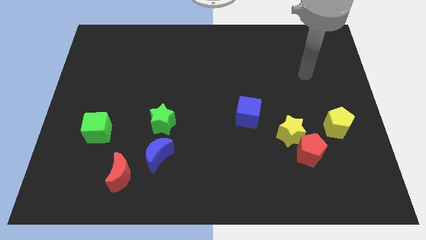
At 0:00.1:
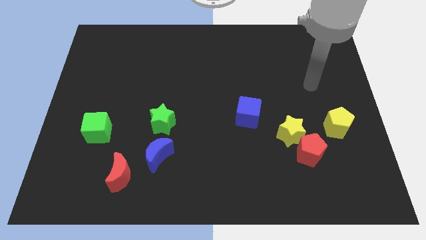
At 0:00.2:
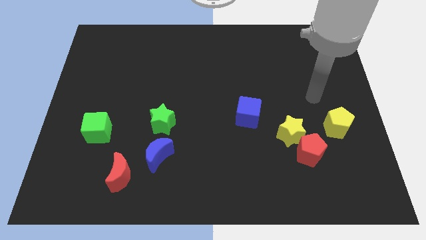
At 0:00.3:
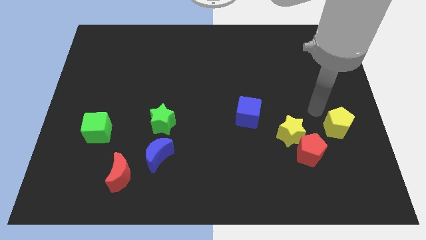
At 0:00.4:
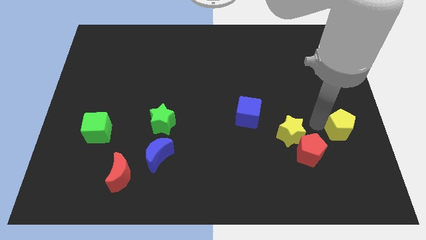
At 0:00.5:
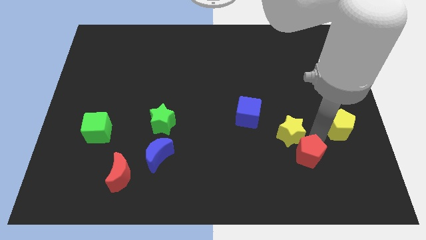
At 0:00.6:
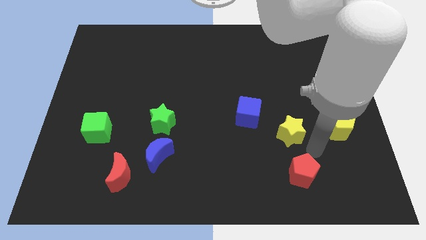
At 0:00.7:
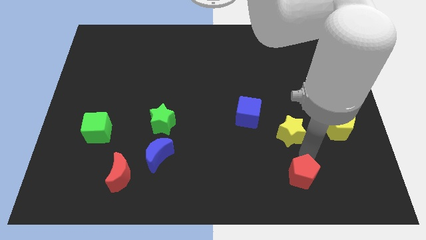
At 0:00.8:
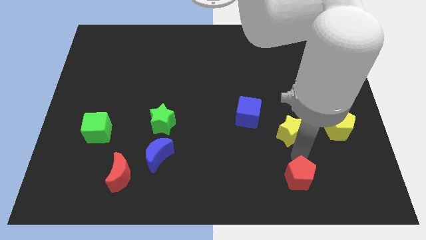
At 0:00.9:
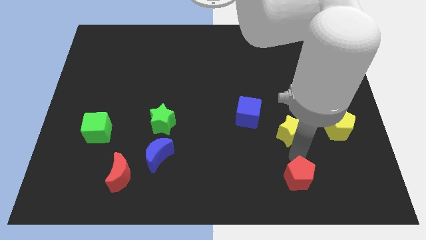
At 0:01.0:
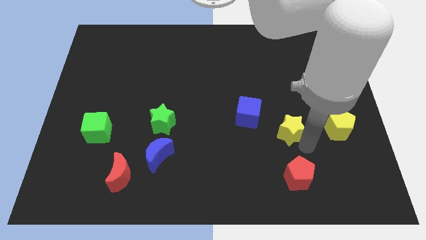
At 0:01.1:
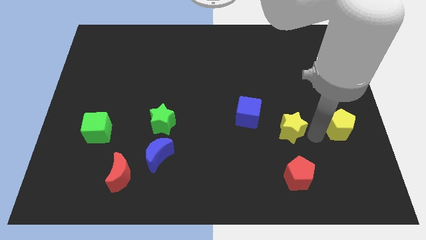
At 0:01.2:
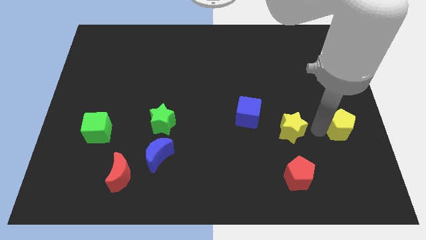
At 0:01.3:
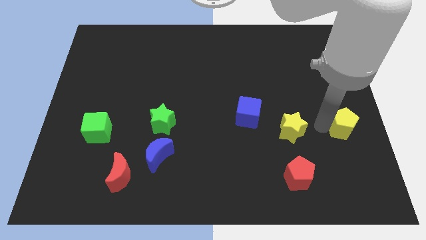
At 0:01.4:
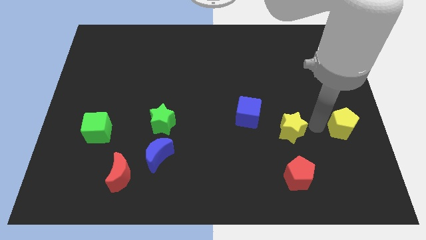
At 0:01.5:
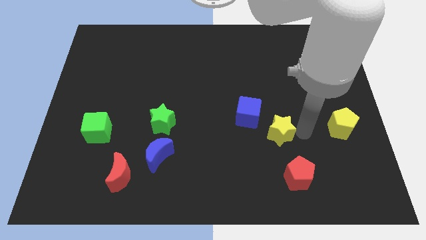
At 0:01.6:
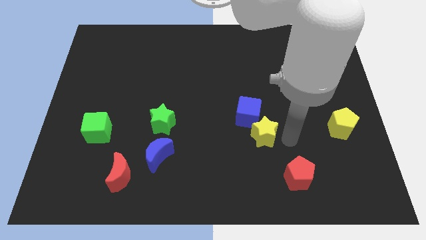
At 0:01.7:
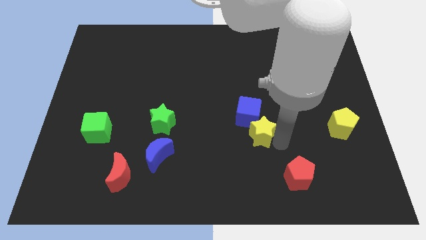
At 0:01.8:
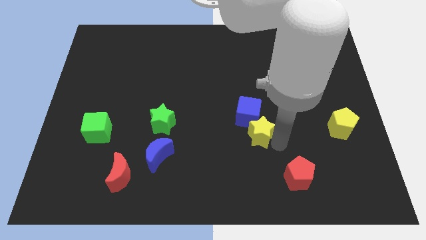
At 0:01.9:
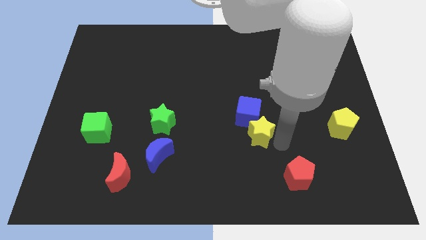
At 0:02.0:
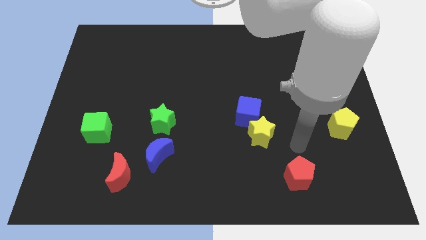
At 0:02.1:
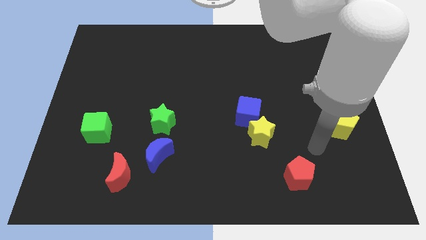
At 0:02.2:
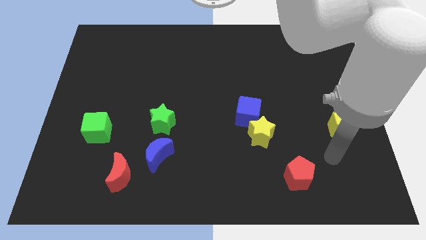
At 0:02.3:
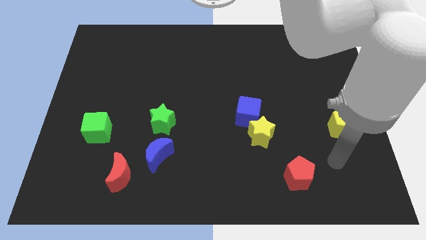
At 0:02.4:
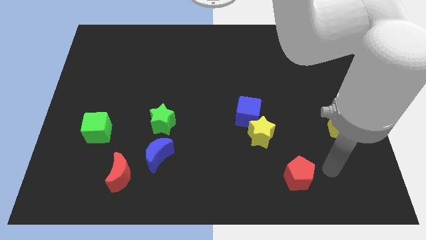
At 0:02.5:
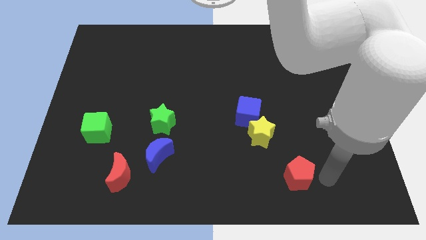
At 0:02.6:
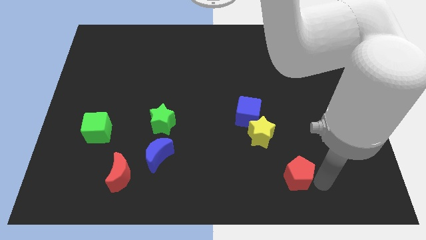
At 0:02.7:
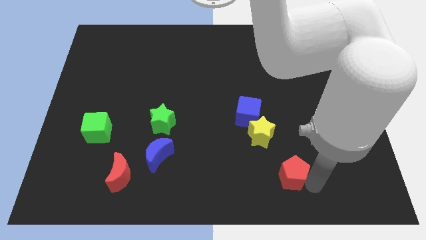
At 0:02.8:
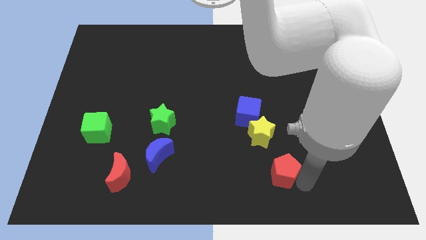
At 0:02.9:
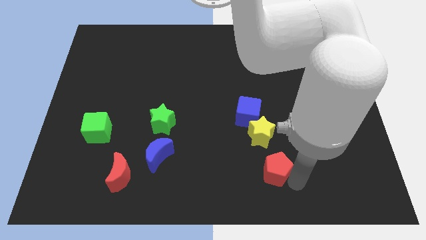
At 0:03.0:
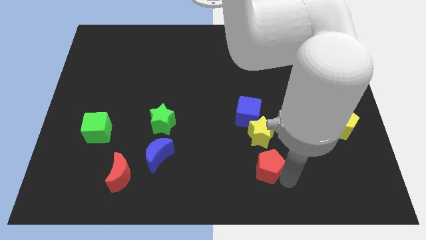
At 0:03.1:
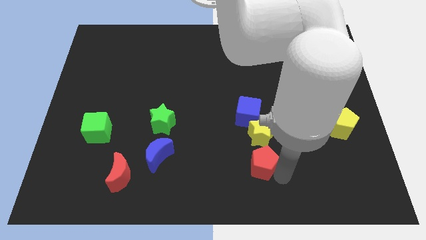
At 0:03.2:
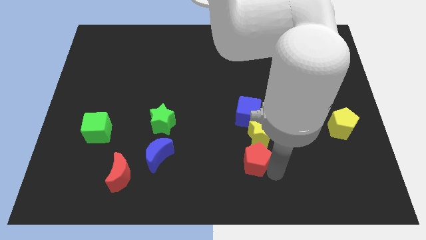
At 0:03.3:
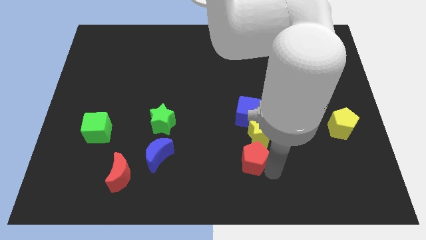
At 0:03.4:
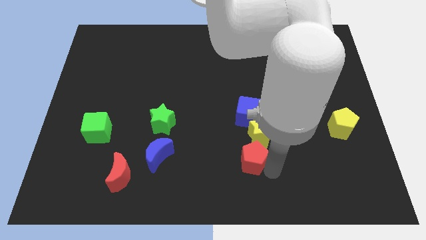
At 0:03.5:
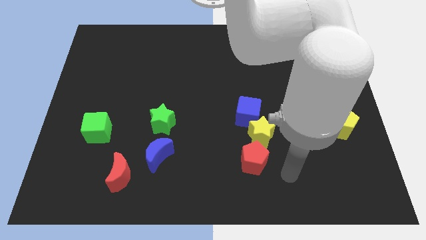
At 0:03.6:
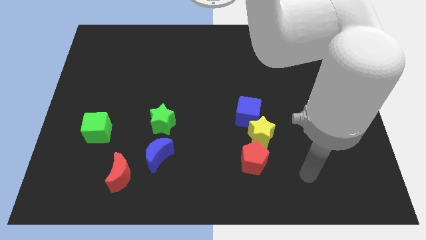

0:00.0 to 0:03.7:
push the yellow star and red pentagon in a vertical line below the blue cube

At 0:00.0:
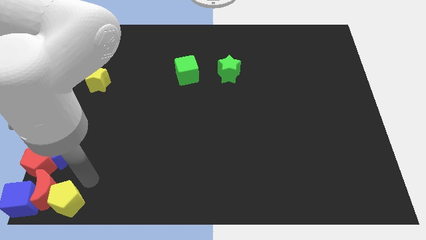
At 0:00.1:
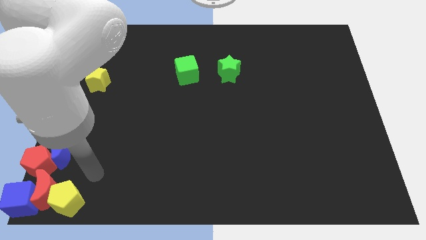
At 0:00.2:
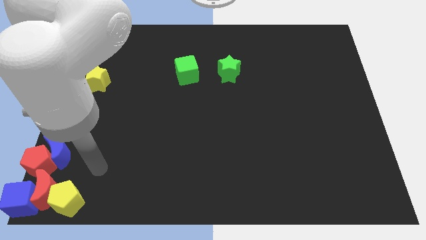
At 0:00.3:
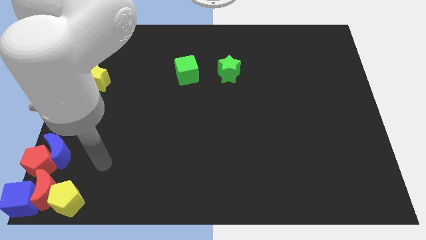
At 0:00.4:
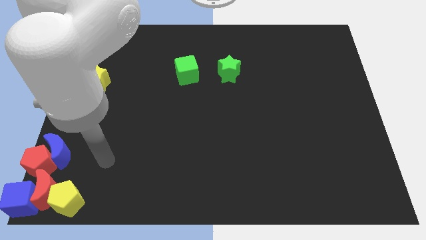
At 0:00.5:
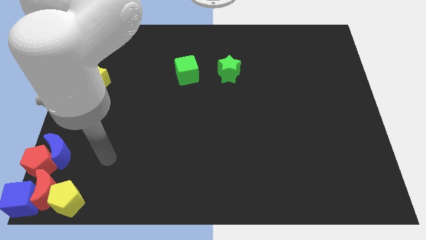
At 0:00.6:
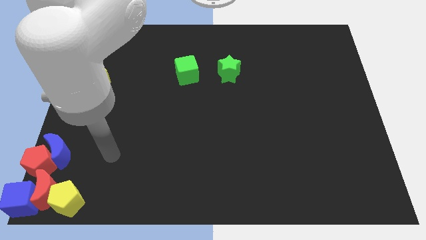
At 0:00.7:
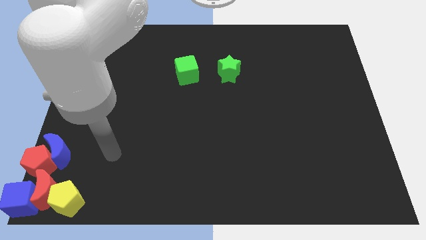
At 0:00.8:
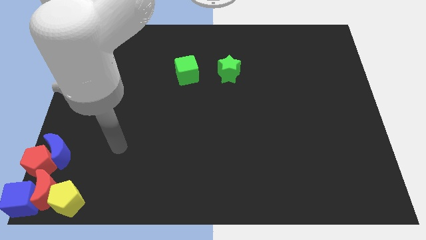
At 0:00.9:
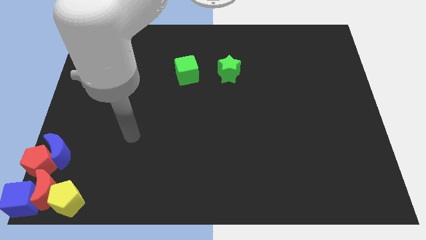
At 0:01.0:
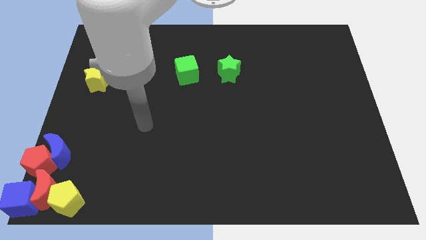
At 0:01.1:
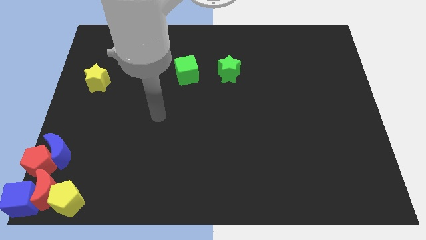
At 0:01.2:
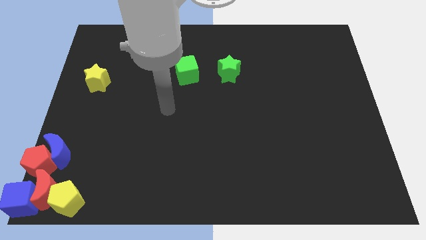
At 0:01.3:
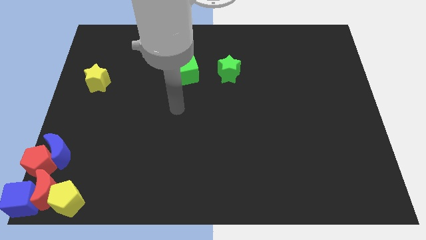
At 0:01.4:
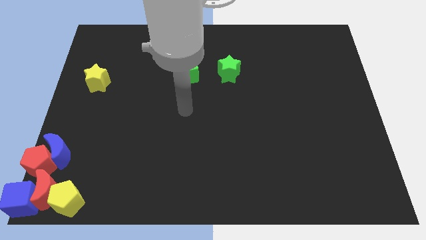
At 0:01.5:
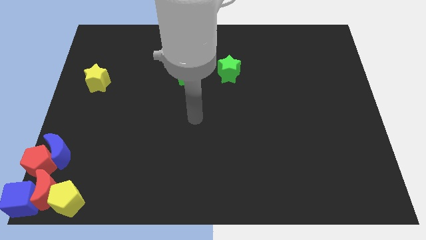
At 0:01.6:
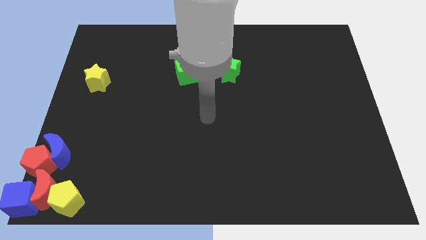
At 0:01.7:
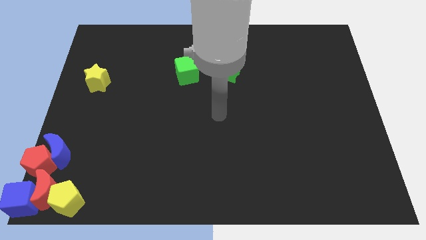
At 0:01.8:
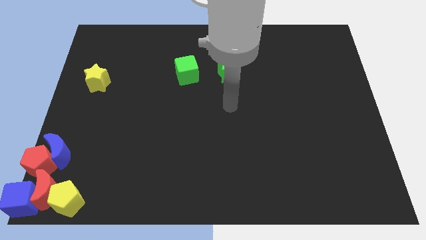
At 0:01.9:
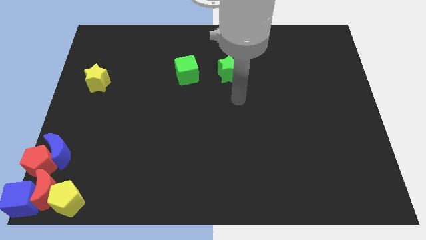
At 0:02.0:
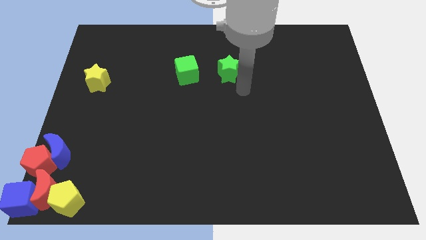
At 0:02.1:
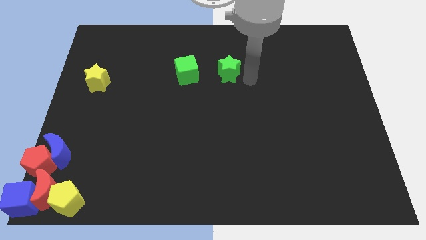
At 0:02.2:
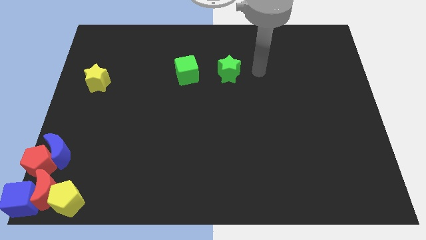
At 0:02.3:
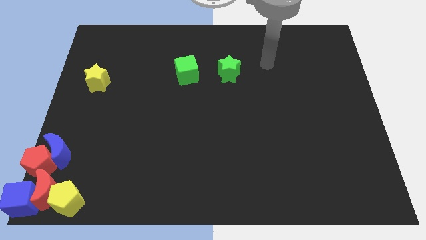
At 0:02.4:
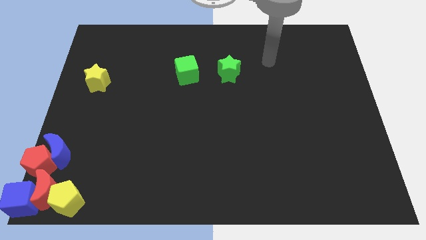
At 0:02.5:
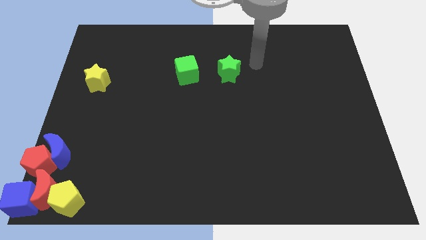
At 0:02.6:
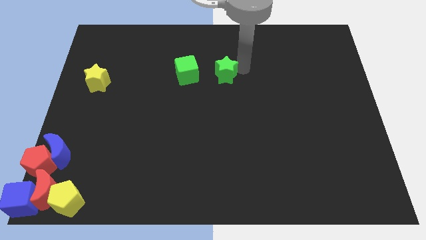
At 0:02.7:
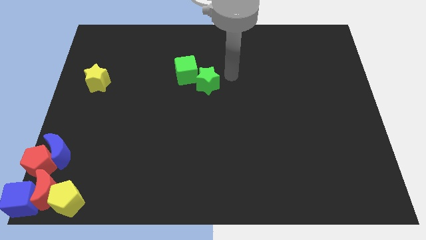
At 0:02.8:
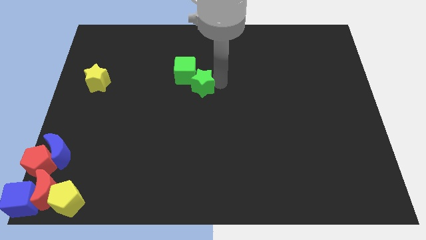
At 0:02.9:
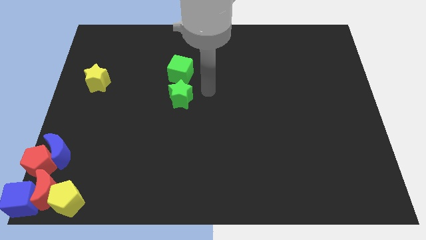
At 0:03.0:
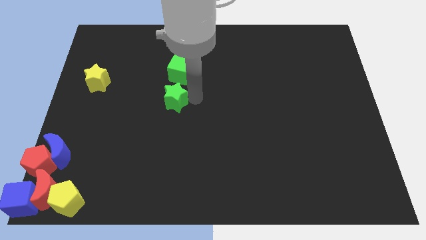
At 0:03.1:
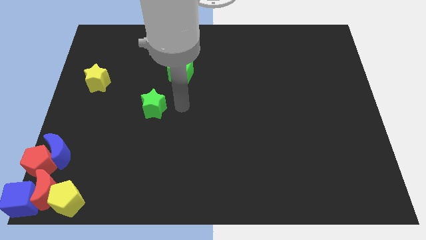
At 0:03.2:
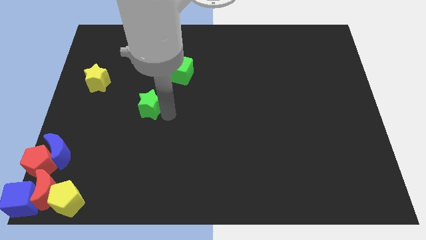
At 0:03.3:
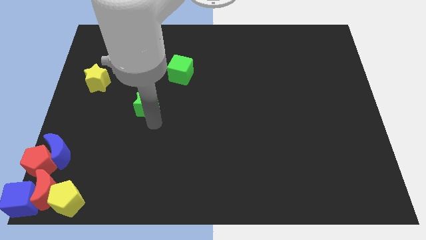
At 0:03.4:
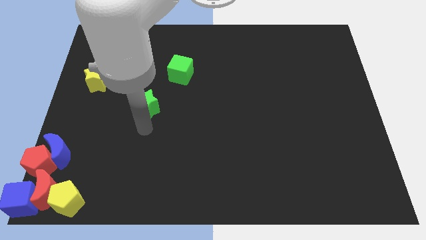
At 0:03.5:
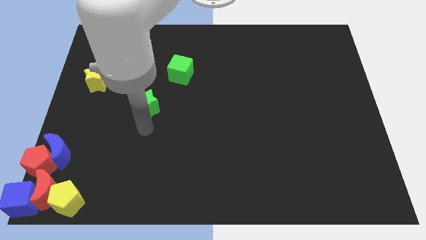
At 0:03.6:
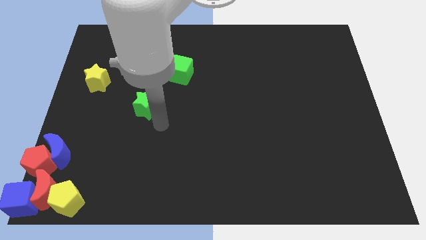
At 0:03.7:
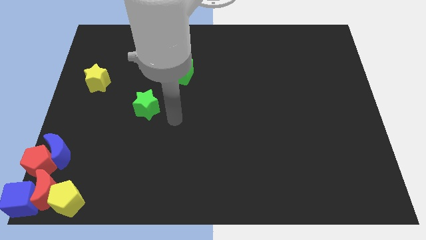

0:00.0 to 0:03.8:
place the green star diagonal to the yellow star

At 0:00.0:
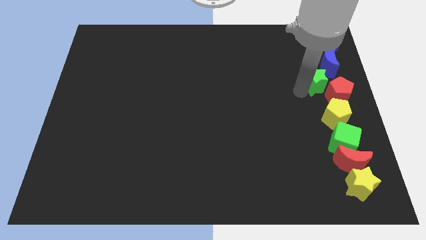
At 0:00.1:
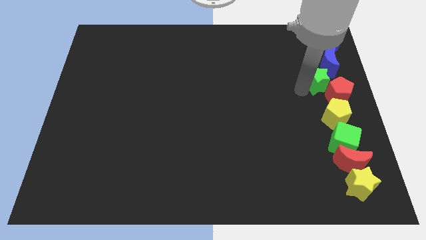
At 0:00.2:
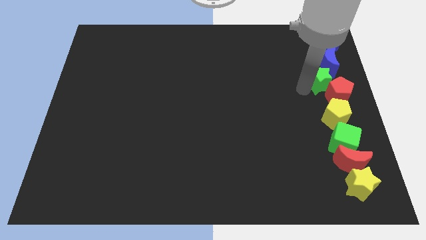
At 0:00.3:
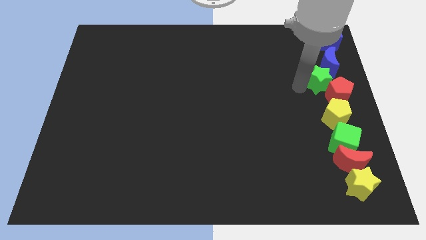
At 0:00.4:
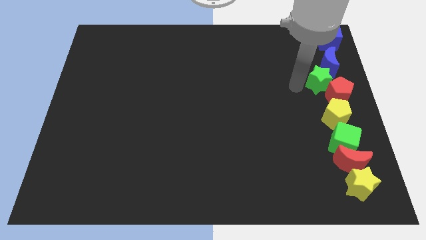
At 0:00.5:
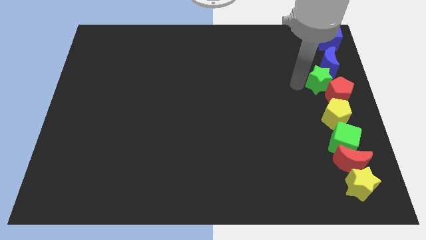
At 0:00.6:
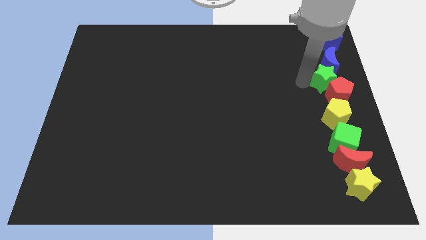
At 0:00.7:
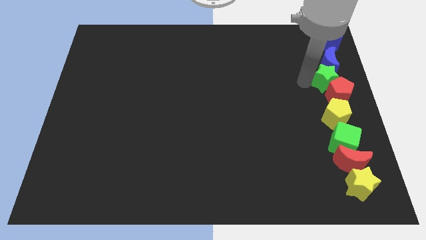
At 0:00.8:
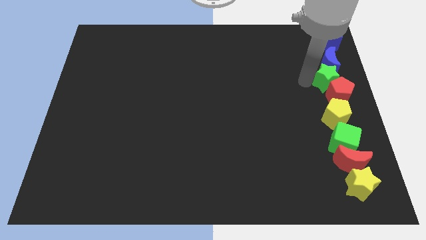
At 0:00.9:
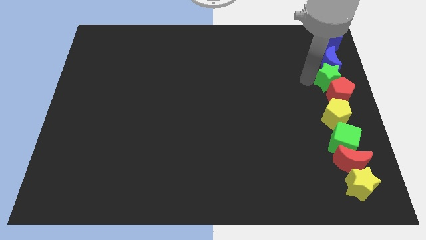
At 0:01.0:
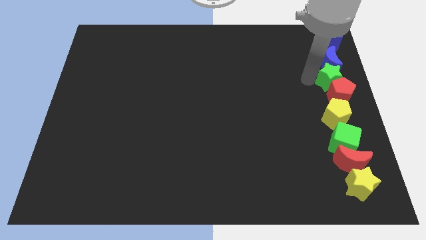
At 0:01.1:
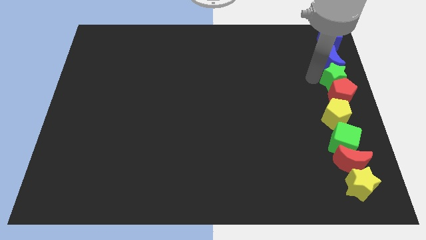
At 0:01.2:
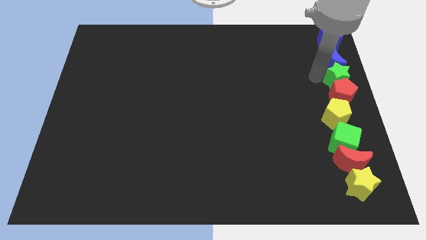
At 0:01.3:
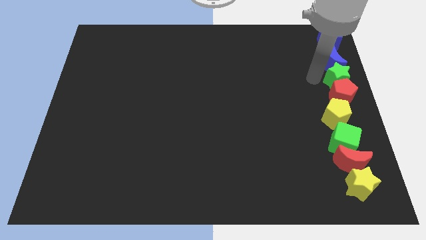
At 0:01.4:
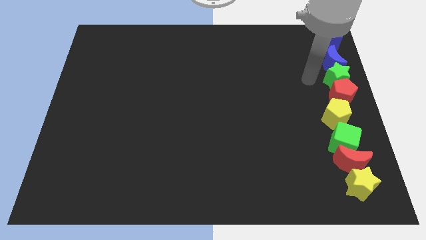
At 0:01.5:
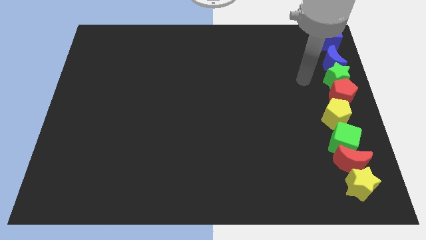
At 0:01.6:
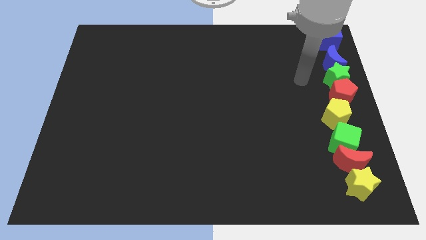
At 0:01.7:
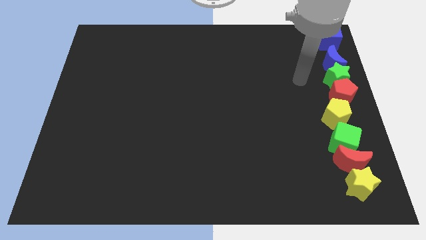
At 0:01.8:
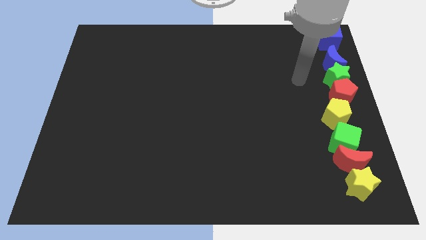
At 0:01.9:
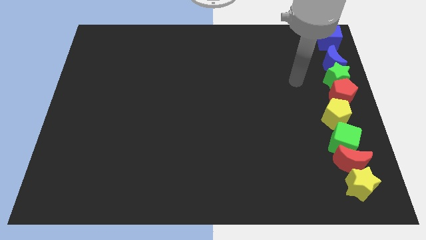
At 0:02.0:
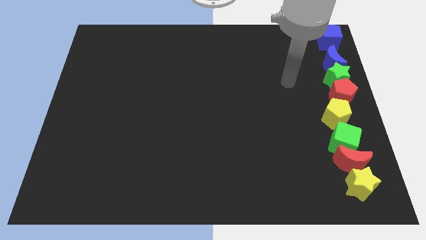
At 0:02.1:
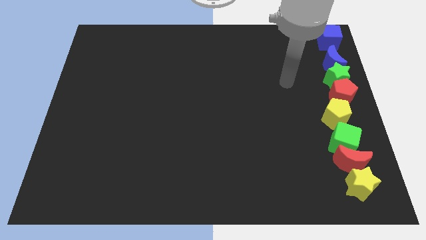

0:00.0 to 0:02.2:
place the green star in between the blue moon and red pentagon
